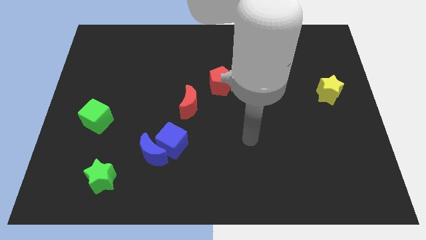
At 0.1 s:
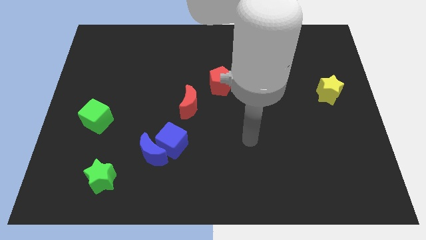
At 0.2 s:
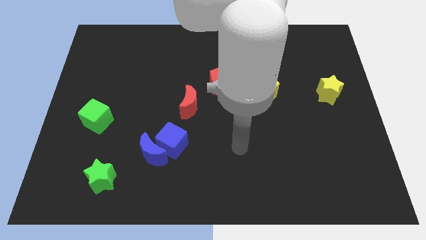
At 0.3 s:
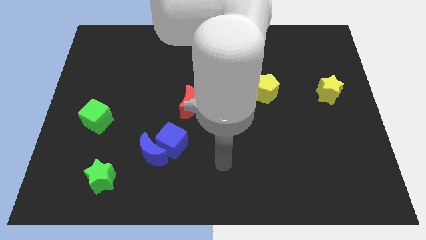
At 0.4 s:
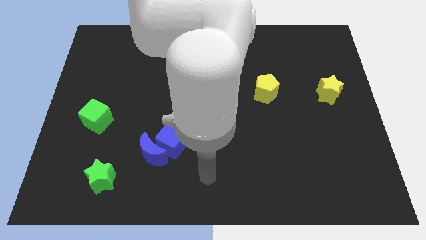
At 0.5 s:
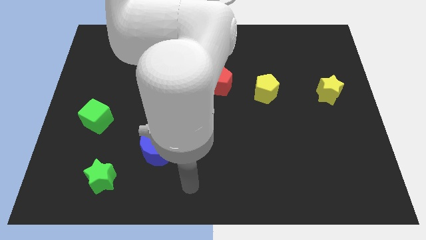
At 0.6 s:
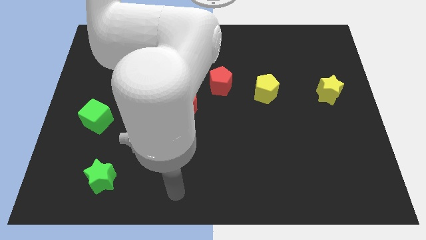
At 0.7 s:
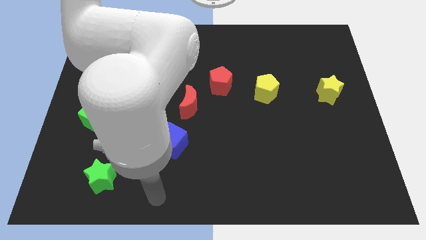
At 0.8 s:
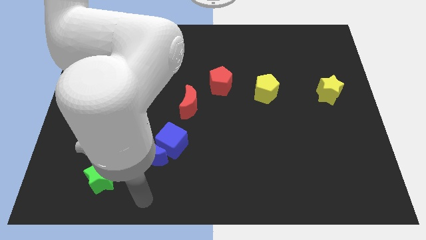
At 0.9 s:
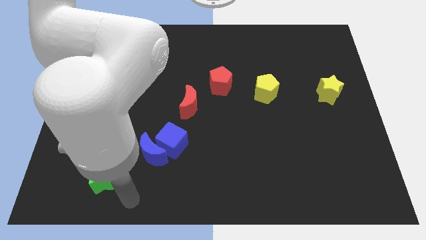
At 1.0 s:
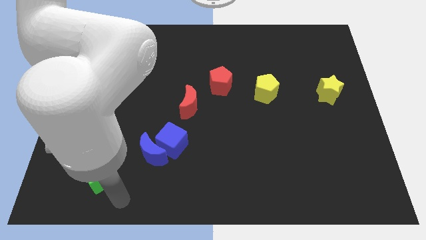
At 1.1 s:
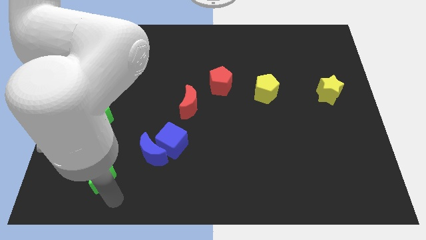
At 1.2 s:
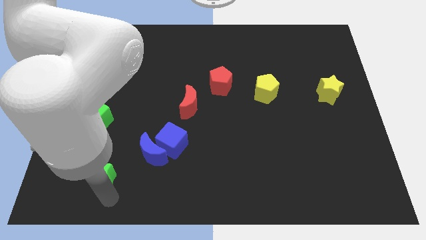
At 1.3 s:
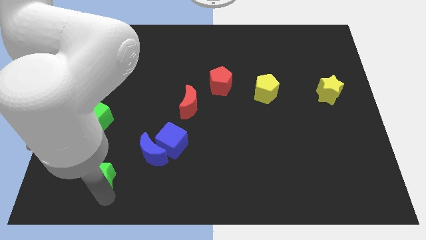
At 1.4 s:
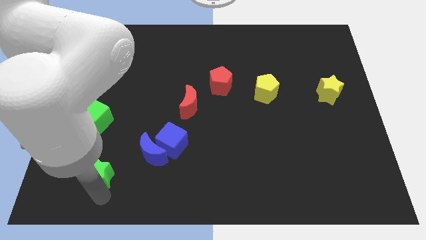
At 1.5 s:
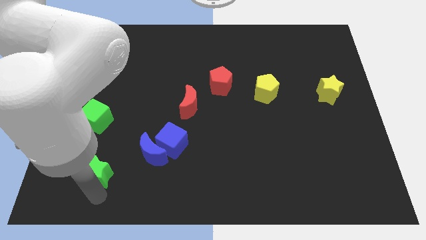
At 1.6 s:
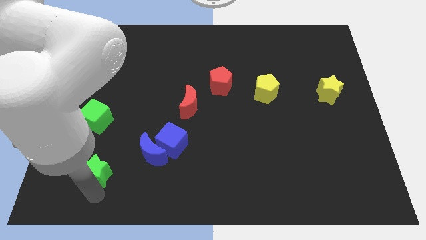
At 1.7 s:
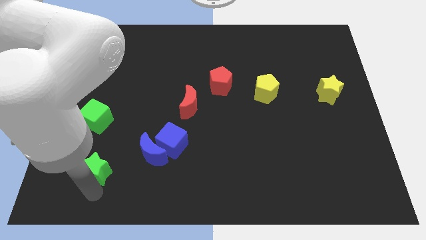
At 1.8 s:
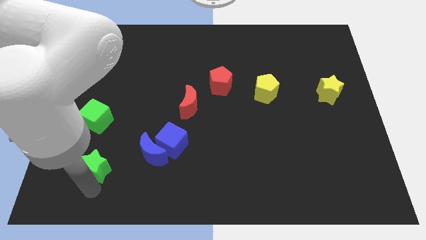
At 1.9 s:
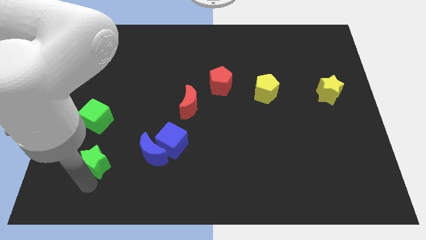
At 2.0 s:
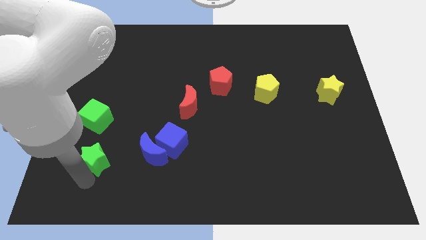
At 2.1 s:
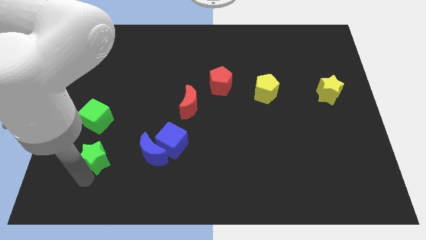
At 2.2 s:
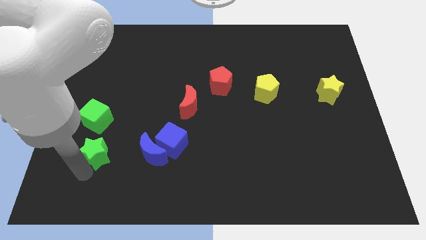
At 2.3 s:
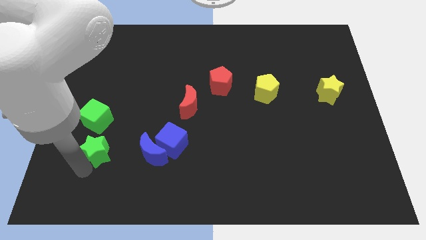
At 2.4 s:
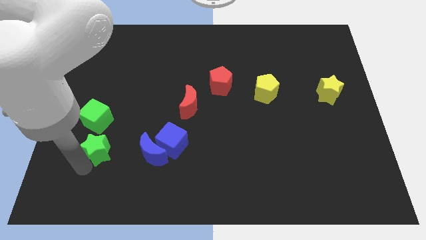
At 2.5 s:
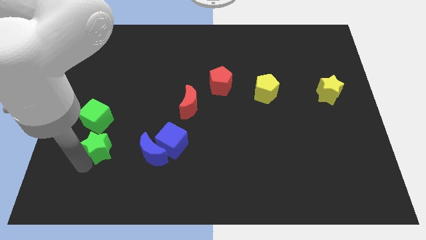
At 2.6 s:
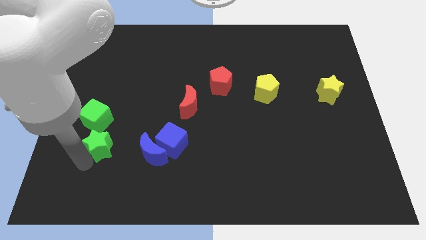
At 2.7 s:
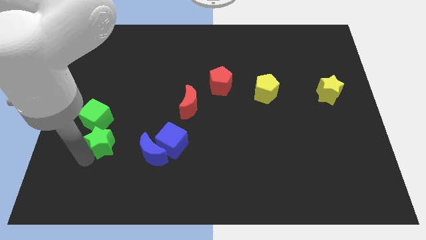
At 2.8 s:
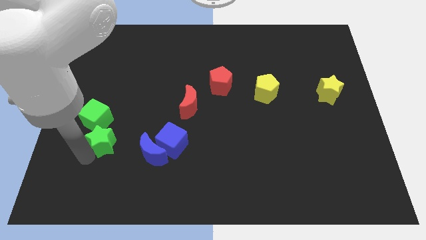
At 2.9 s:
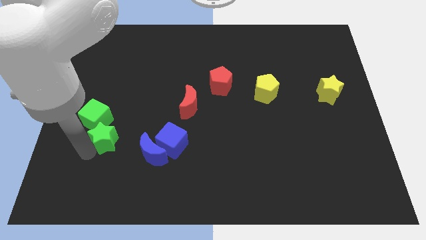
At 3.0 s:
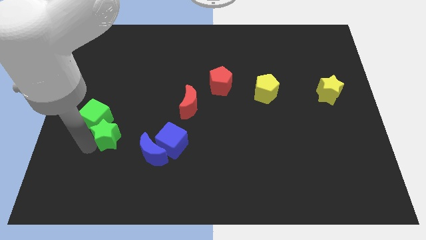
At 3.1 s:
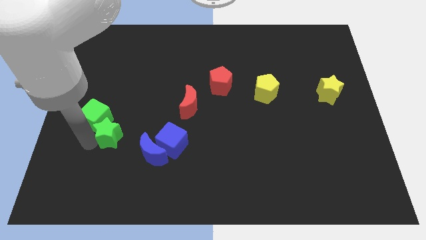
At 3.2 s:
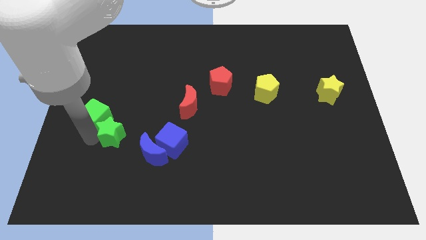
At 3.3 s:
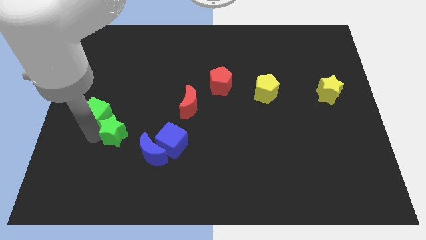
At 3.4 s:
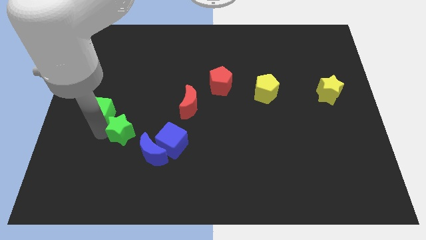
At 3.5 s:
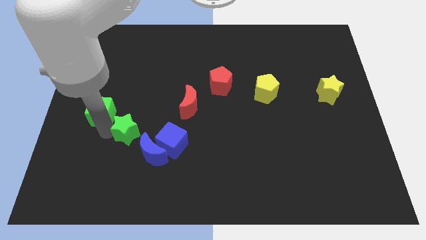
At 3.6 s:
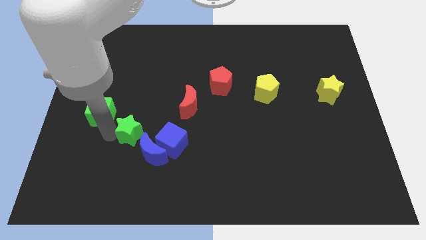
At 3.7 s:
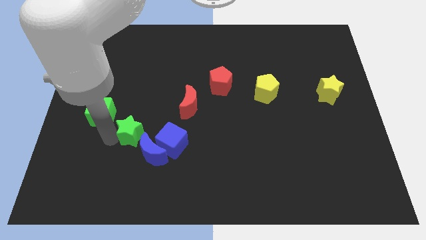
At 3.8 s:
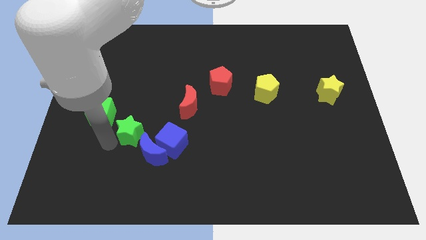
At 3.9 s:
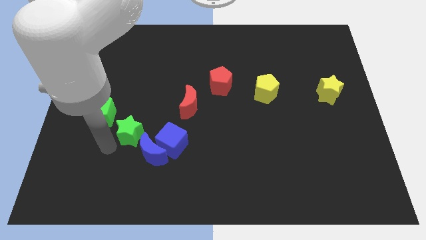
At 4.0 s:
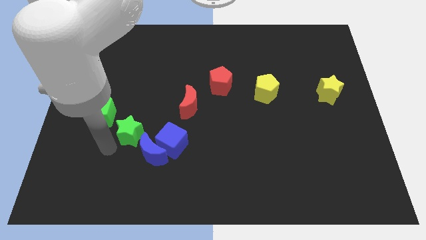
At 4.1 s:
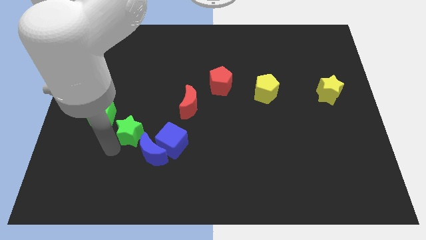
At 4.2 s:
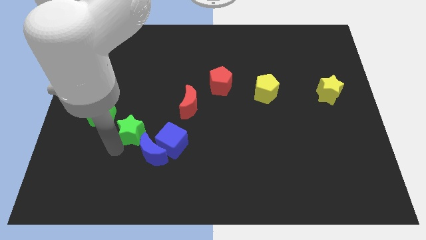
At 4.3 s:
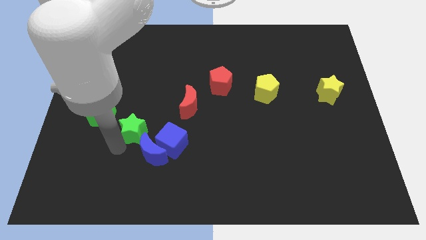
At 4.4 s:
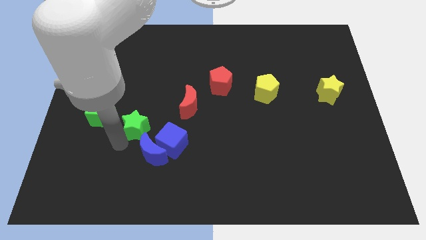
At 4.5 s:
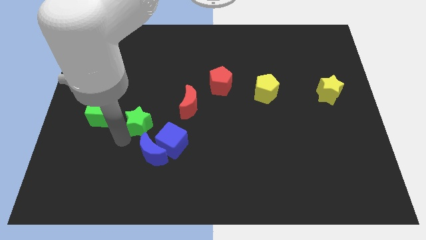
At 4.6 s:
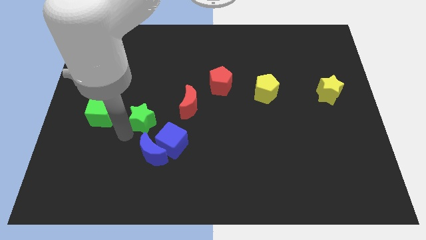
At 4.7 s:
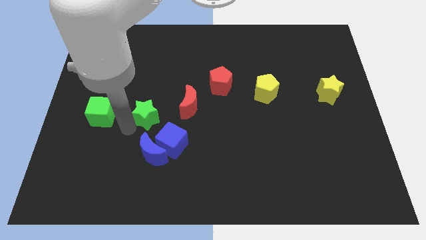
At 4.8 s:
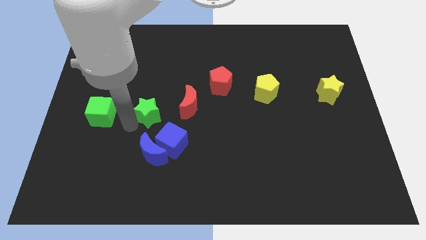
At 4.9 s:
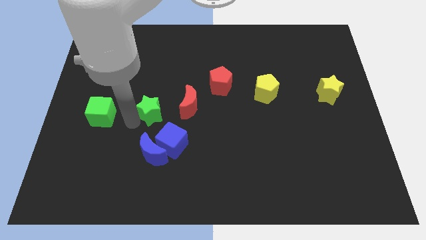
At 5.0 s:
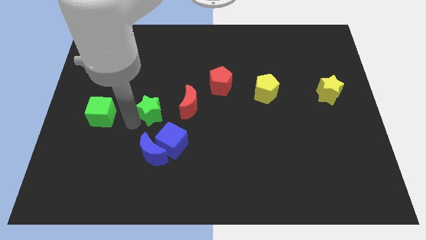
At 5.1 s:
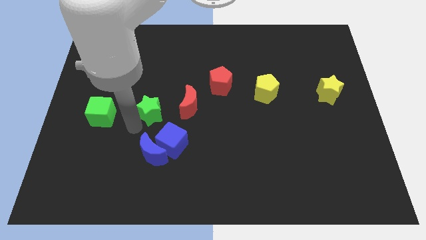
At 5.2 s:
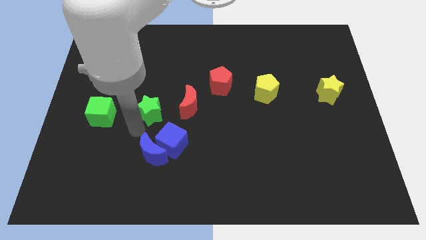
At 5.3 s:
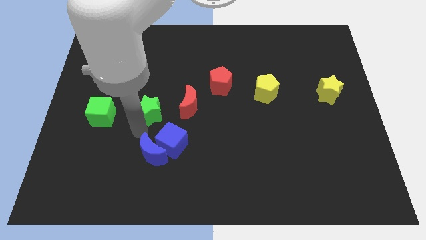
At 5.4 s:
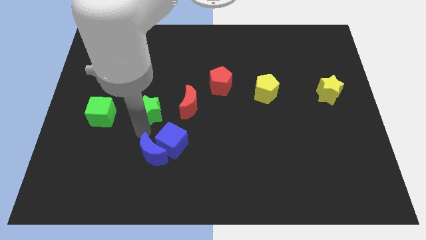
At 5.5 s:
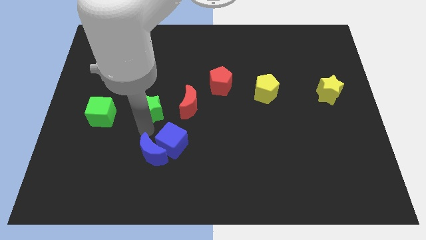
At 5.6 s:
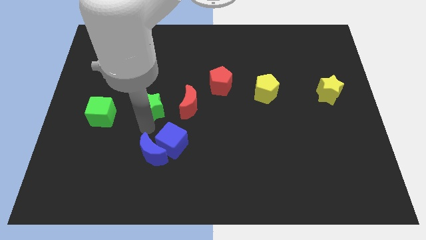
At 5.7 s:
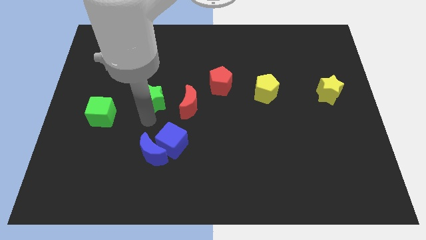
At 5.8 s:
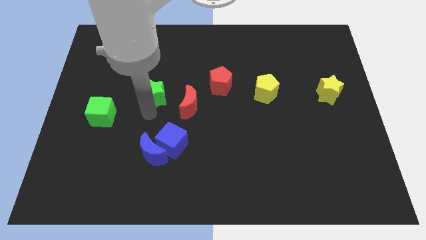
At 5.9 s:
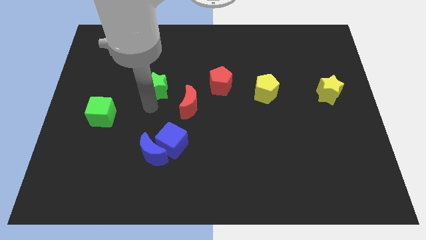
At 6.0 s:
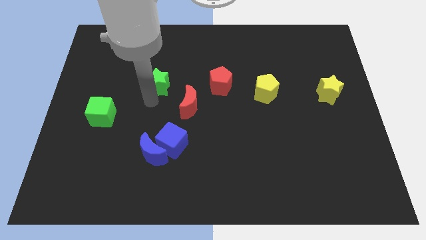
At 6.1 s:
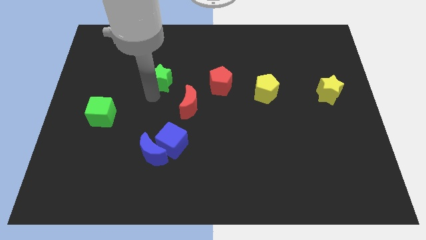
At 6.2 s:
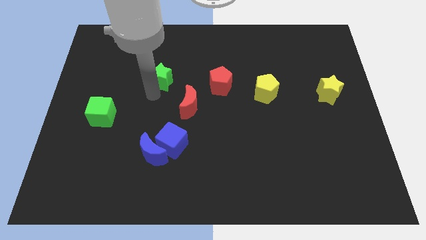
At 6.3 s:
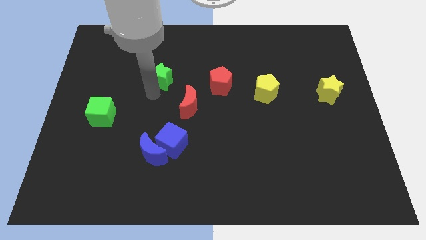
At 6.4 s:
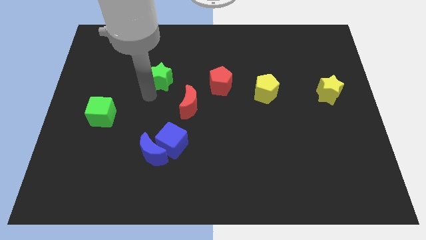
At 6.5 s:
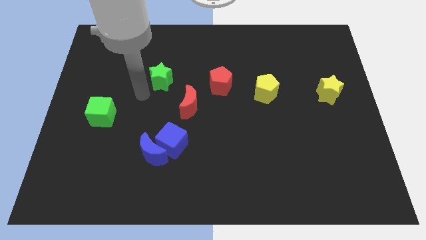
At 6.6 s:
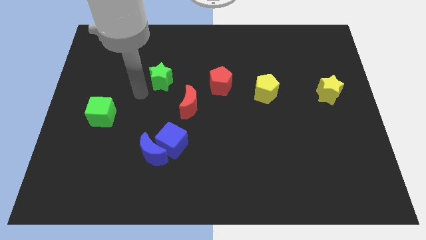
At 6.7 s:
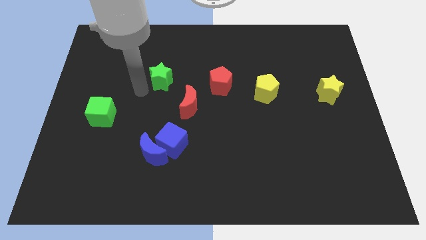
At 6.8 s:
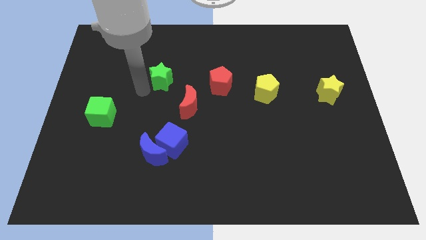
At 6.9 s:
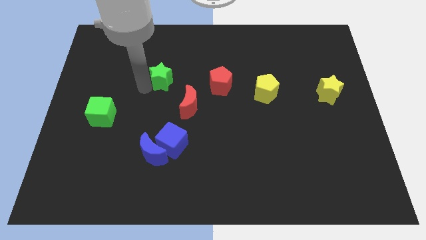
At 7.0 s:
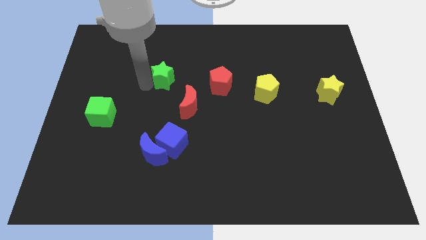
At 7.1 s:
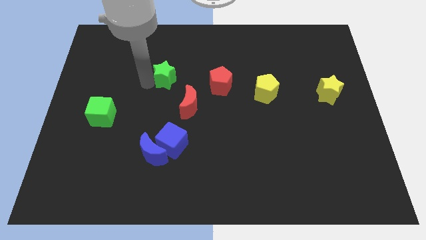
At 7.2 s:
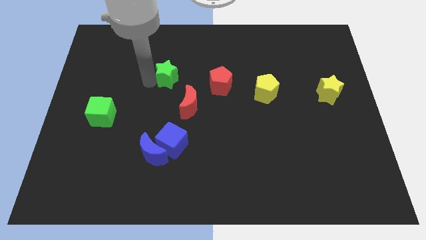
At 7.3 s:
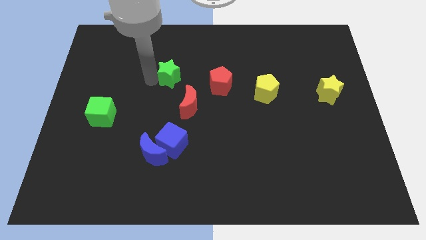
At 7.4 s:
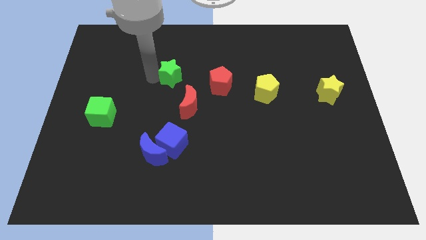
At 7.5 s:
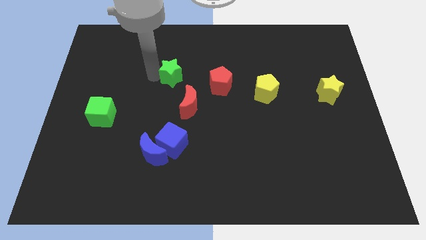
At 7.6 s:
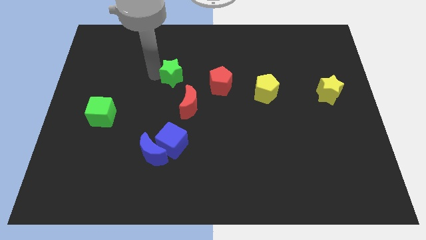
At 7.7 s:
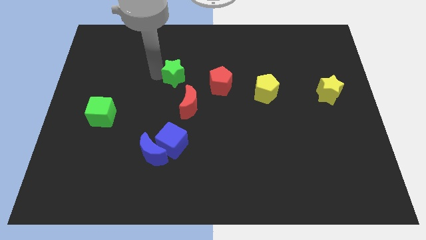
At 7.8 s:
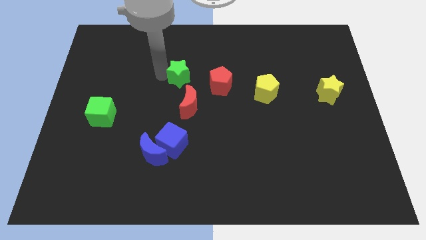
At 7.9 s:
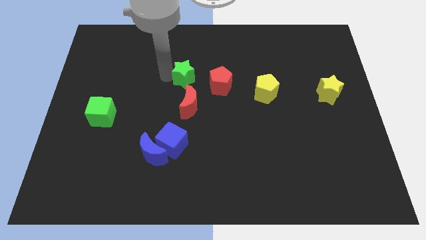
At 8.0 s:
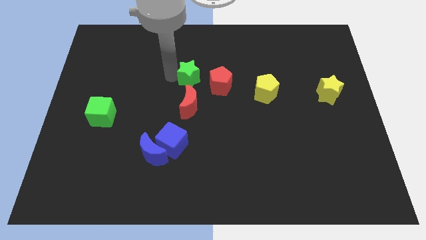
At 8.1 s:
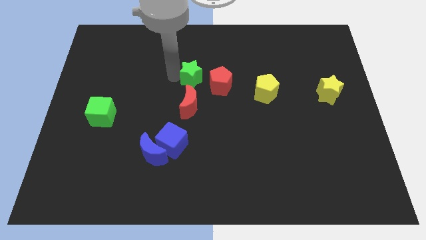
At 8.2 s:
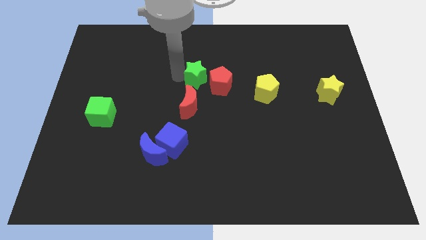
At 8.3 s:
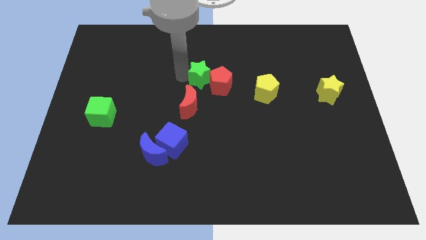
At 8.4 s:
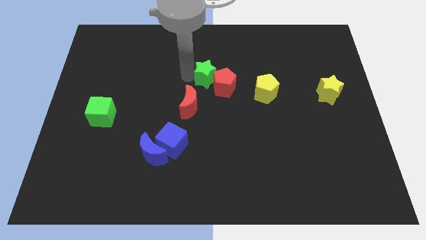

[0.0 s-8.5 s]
put the green star to the red pentagon
